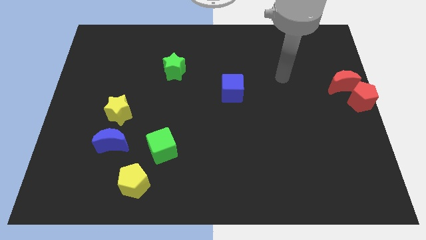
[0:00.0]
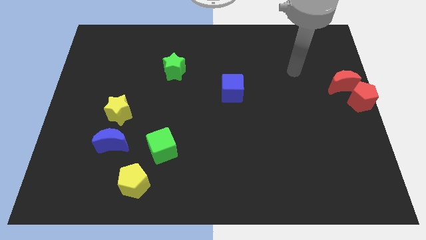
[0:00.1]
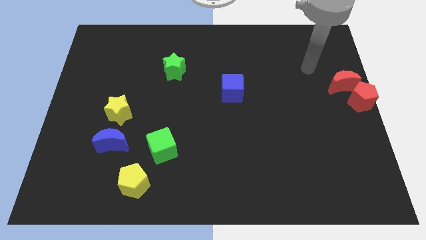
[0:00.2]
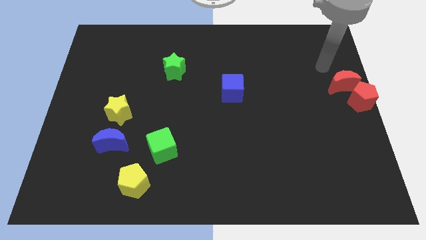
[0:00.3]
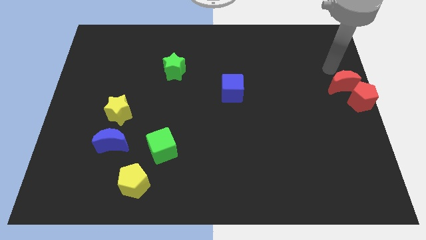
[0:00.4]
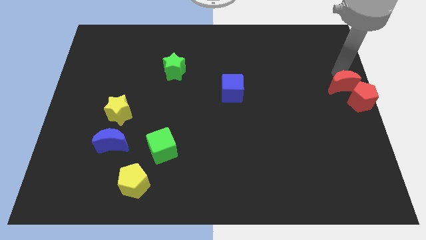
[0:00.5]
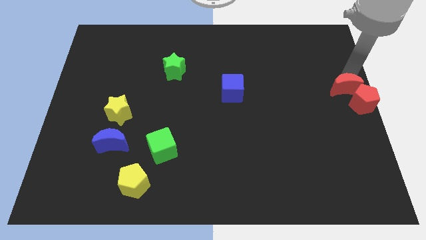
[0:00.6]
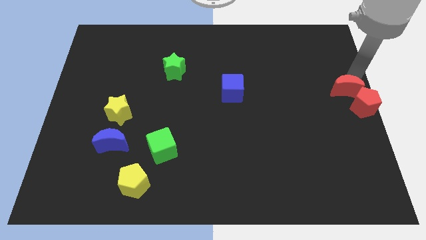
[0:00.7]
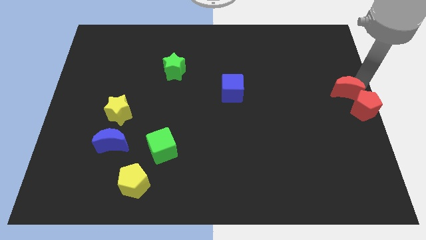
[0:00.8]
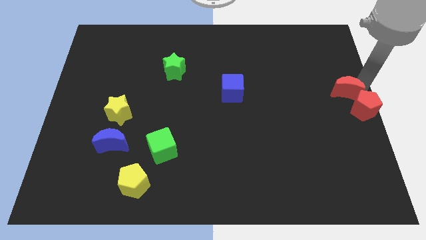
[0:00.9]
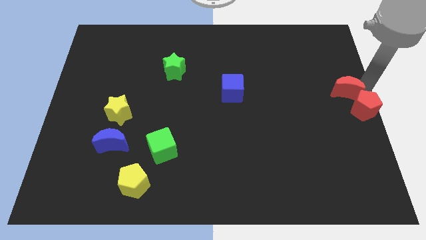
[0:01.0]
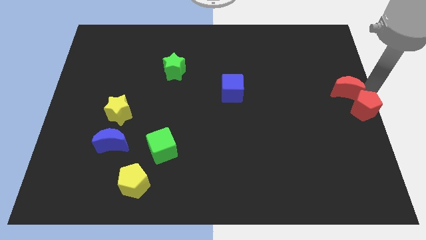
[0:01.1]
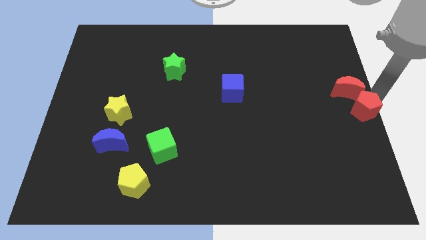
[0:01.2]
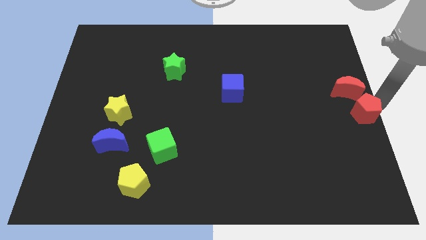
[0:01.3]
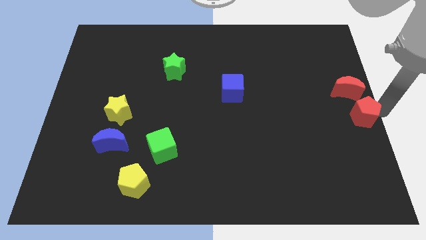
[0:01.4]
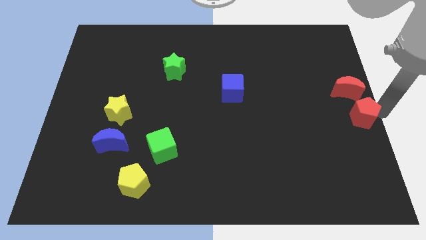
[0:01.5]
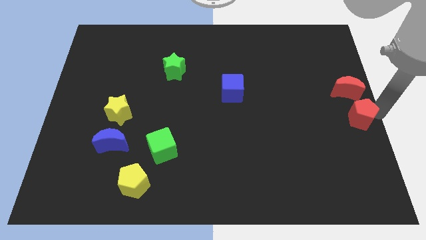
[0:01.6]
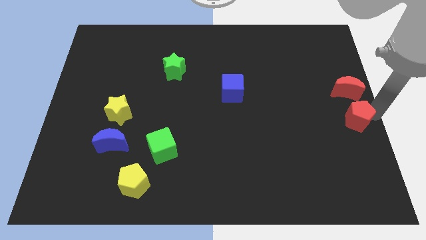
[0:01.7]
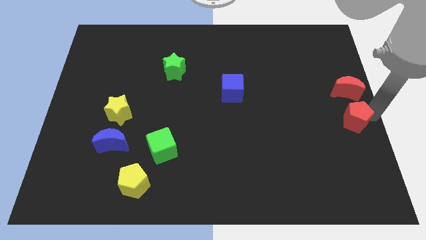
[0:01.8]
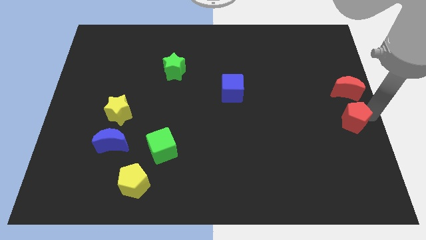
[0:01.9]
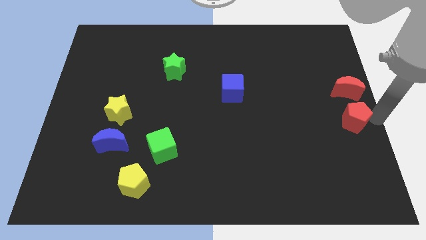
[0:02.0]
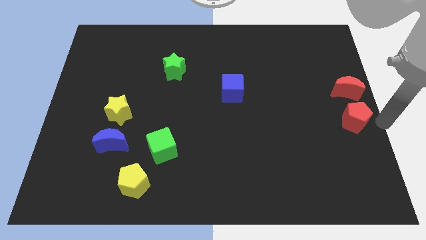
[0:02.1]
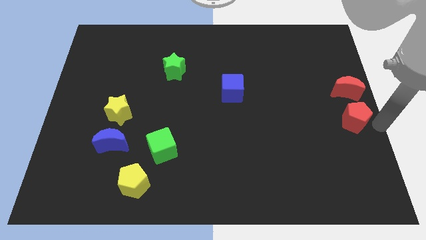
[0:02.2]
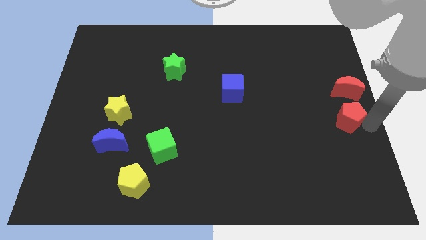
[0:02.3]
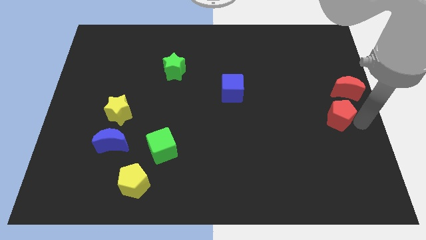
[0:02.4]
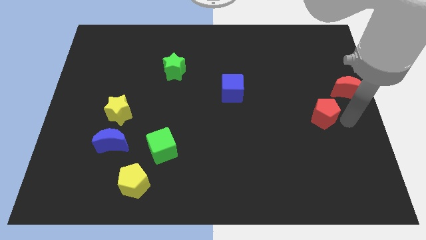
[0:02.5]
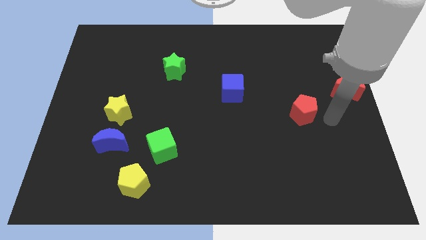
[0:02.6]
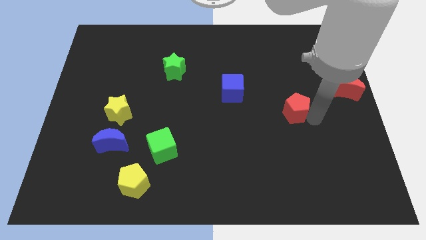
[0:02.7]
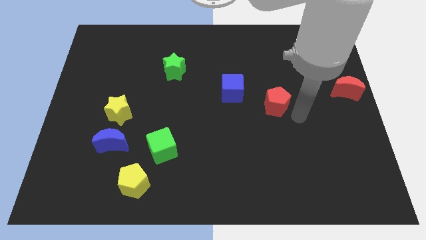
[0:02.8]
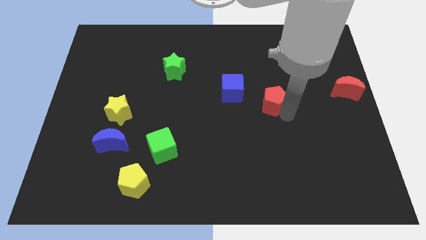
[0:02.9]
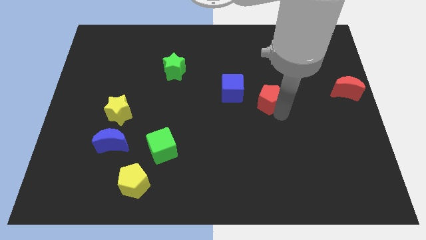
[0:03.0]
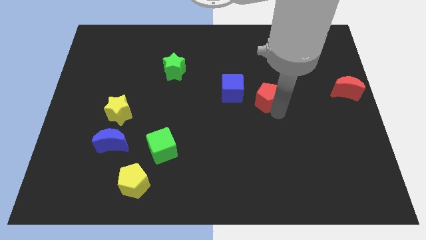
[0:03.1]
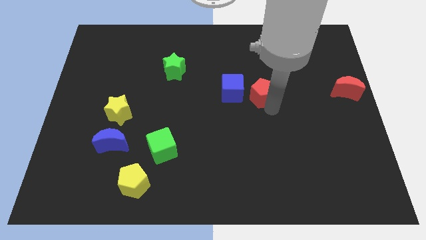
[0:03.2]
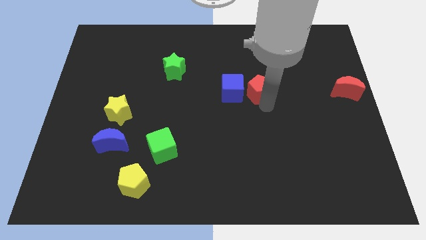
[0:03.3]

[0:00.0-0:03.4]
move the red pentagon towards the center of the board

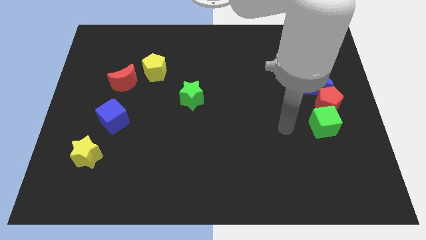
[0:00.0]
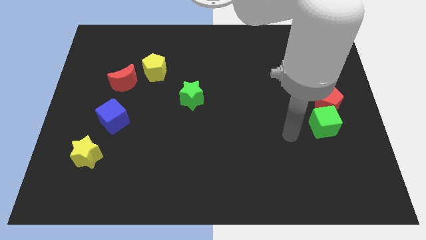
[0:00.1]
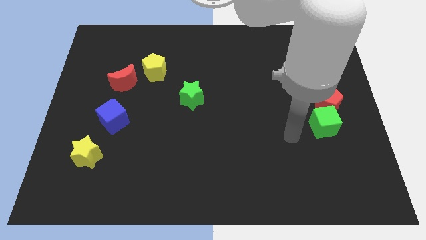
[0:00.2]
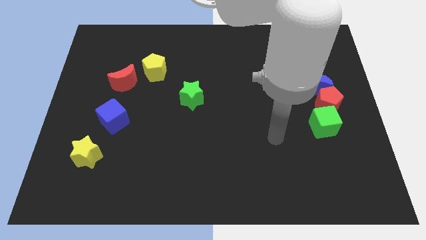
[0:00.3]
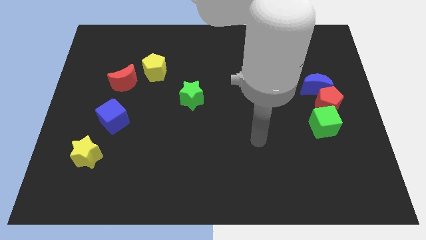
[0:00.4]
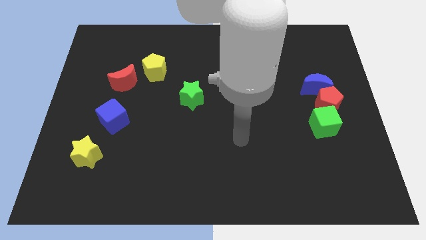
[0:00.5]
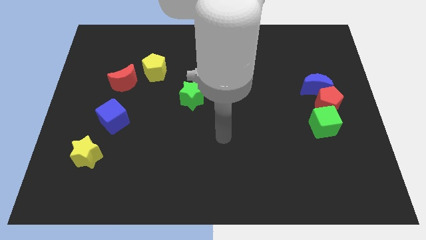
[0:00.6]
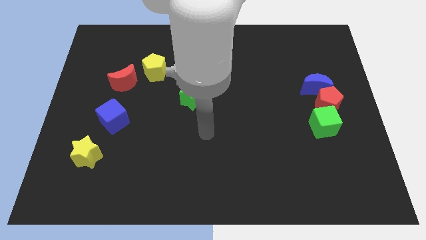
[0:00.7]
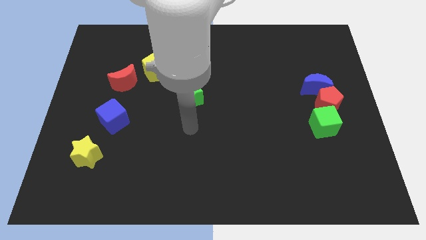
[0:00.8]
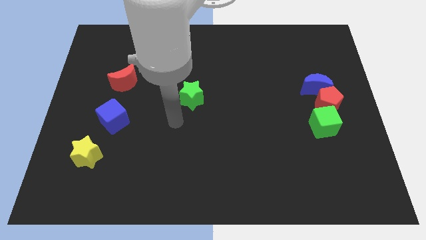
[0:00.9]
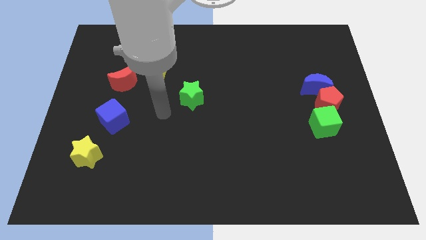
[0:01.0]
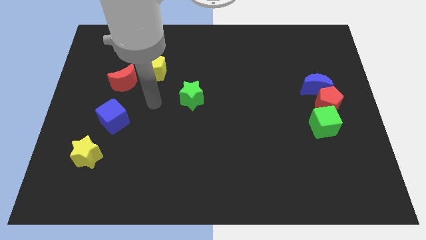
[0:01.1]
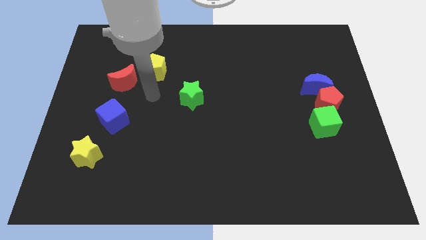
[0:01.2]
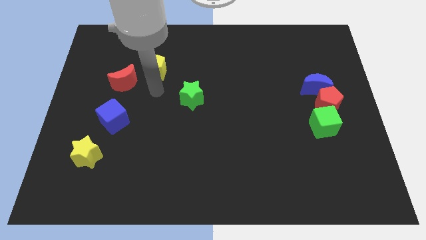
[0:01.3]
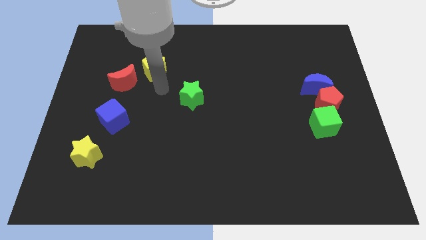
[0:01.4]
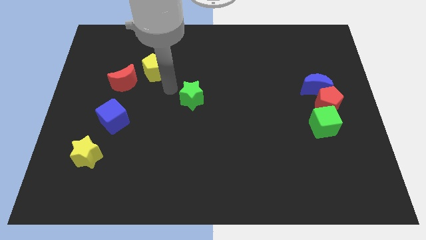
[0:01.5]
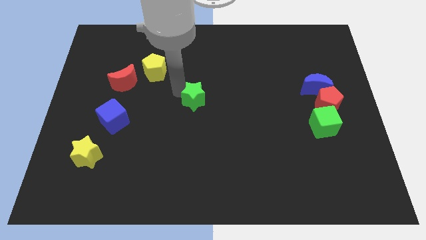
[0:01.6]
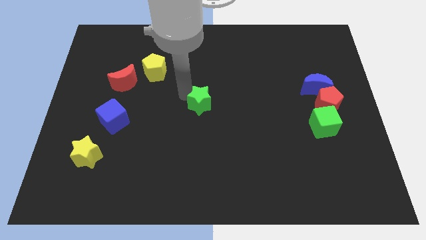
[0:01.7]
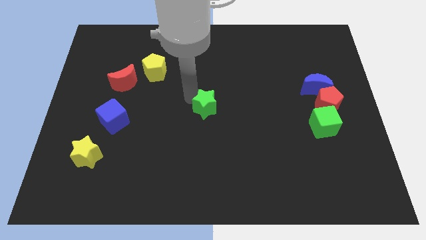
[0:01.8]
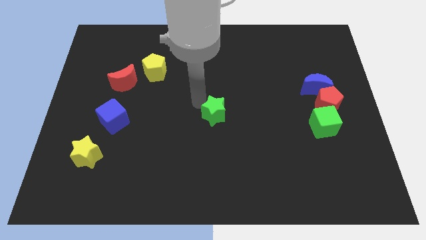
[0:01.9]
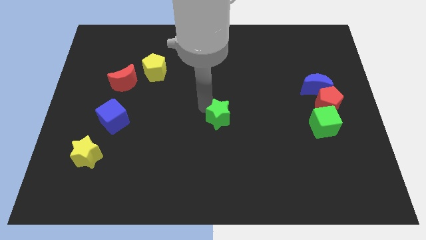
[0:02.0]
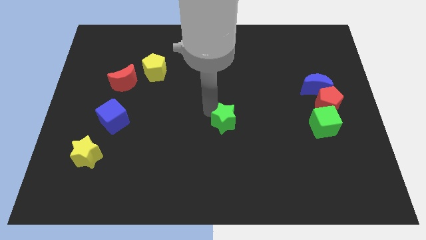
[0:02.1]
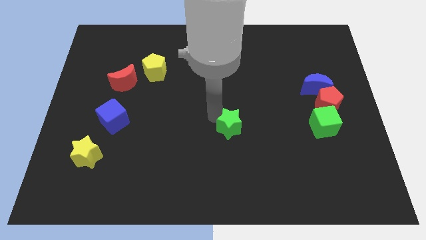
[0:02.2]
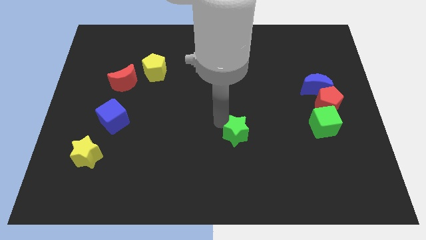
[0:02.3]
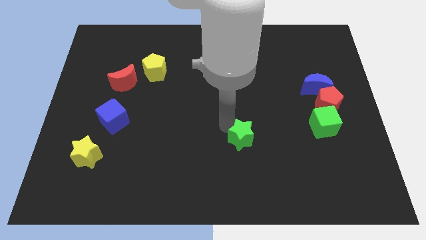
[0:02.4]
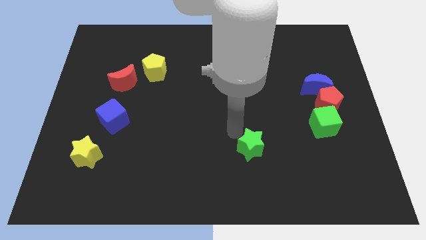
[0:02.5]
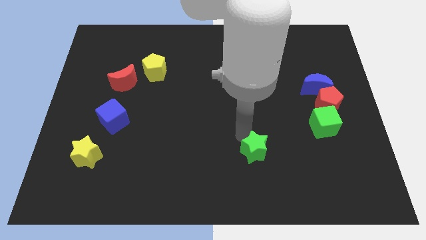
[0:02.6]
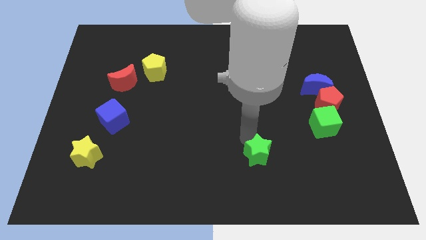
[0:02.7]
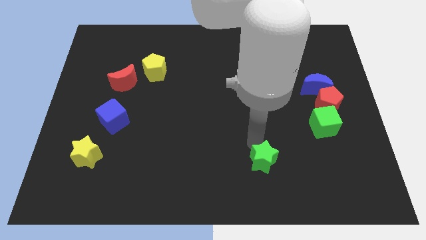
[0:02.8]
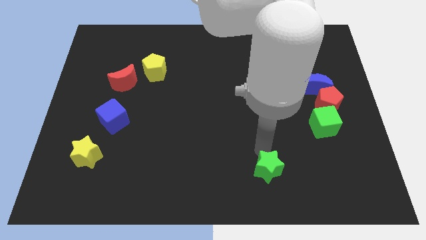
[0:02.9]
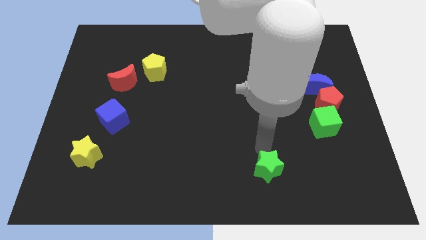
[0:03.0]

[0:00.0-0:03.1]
move the green star to the bottom side of the table

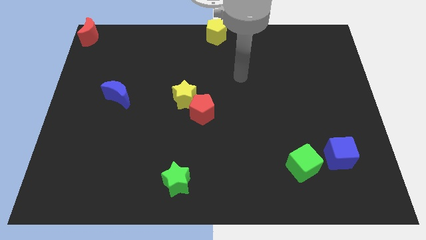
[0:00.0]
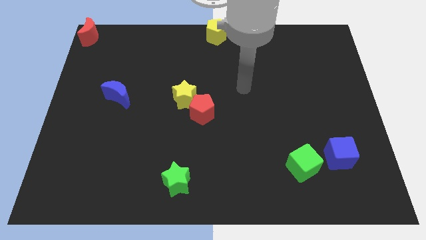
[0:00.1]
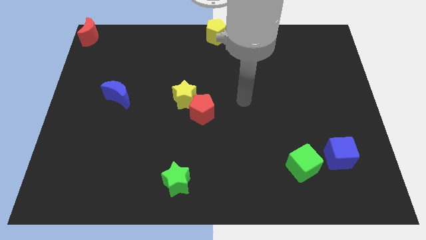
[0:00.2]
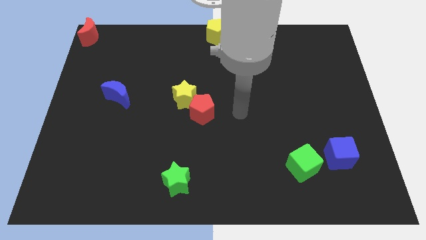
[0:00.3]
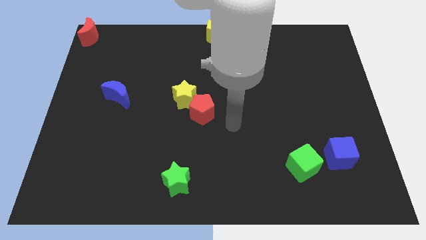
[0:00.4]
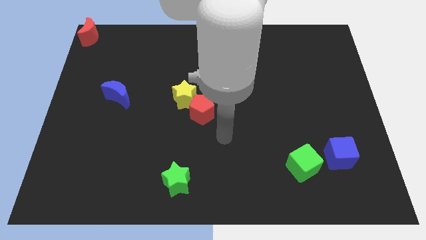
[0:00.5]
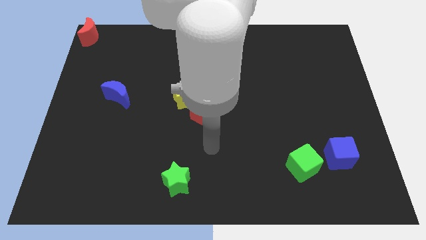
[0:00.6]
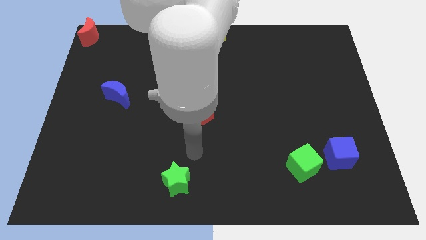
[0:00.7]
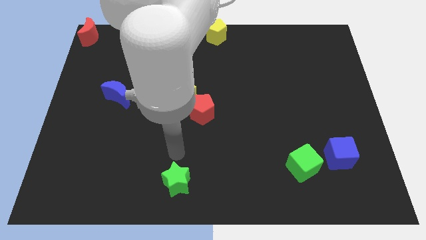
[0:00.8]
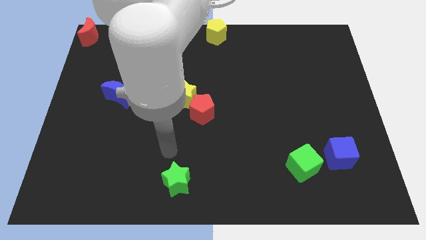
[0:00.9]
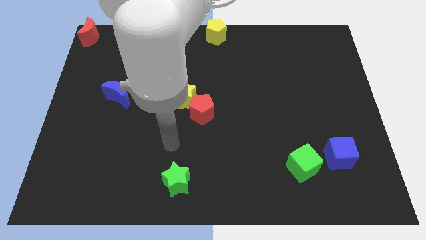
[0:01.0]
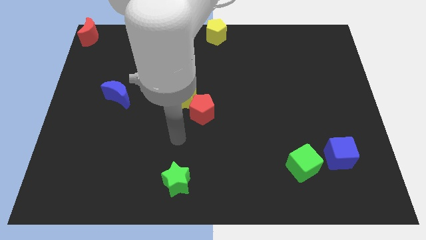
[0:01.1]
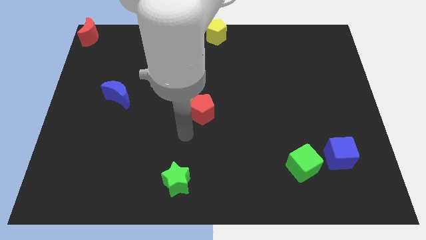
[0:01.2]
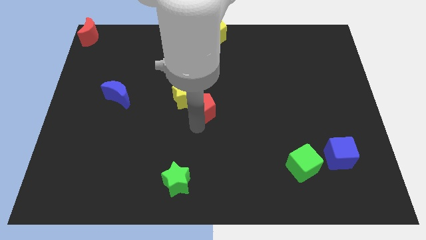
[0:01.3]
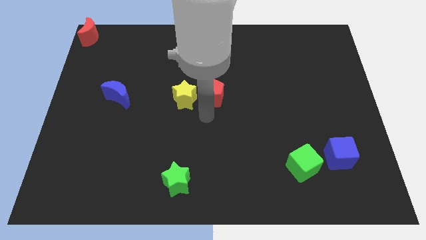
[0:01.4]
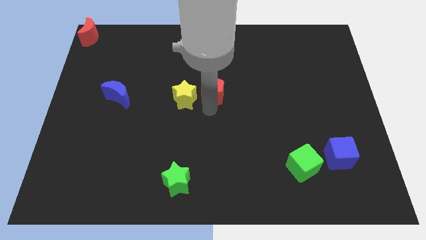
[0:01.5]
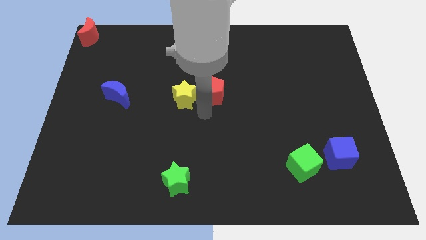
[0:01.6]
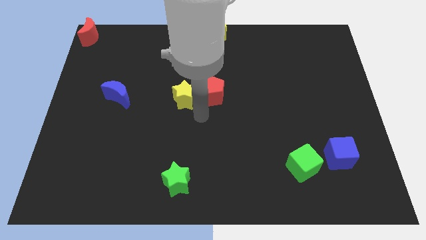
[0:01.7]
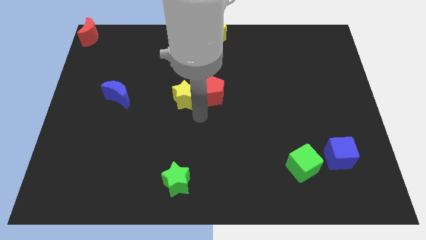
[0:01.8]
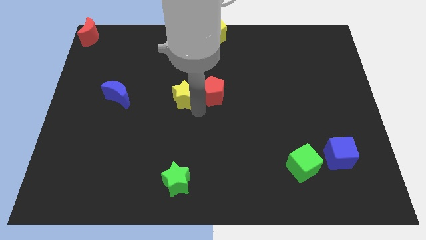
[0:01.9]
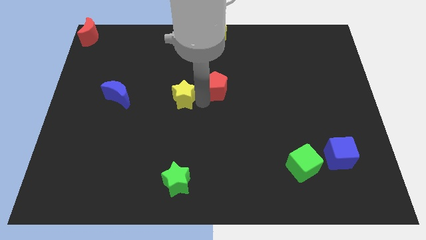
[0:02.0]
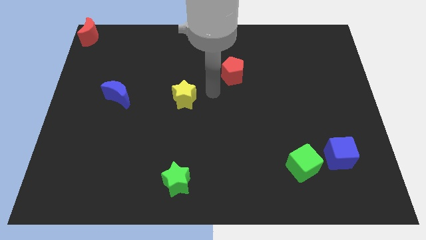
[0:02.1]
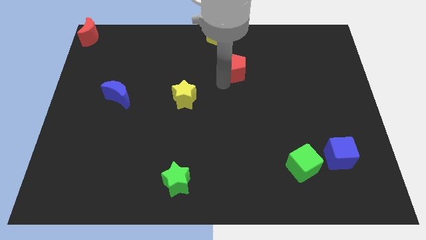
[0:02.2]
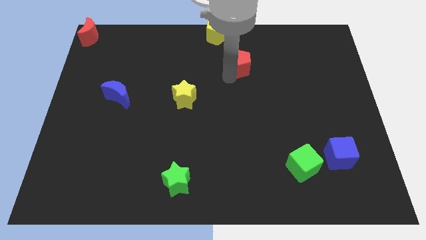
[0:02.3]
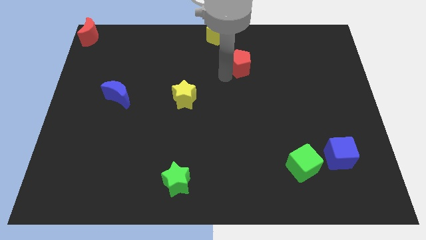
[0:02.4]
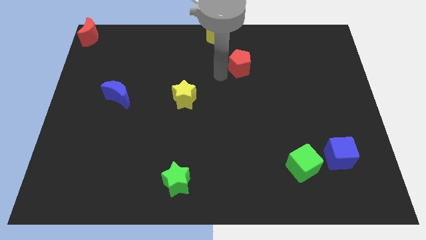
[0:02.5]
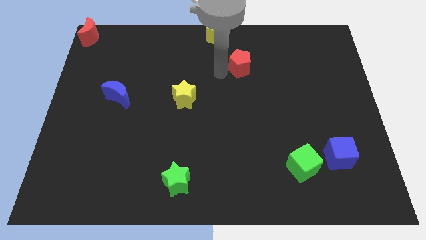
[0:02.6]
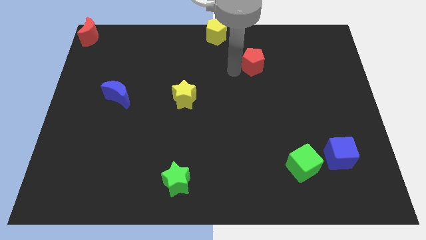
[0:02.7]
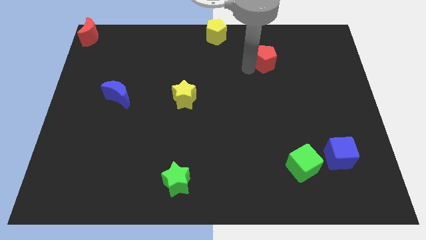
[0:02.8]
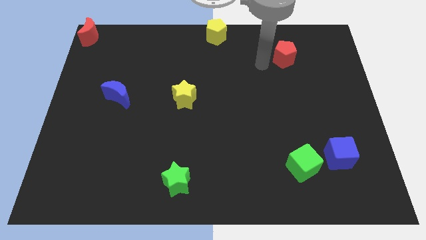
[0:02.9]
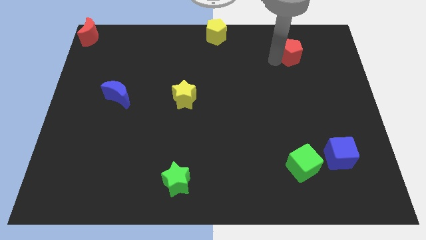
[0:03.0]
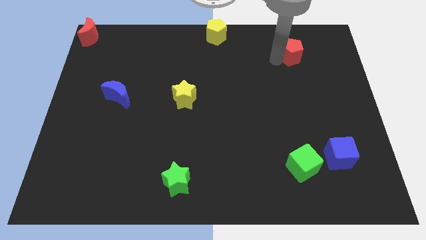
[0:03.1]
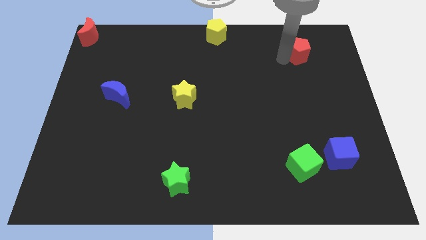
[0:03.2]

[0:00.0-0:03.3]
separate the red pentagon and the yellow star
